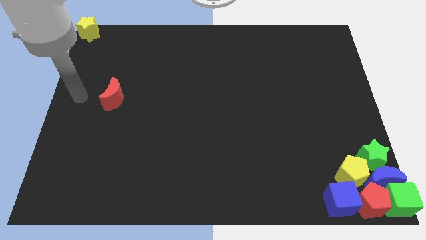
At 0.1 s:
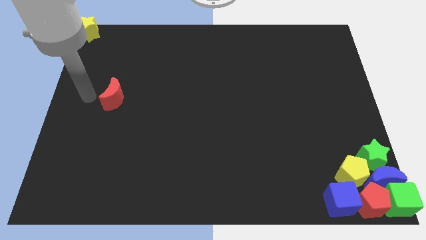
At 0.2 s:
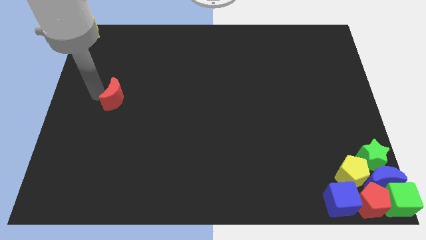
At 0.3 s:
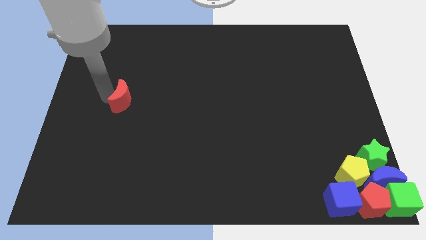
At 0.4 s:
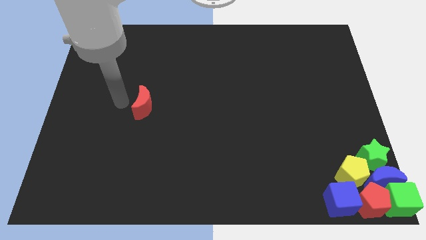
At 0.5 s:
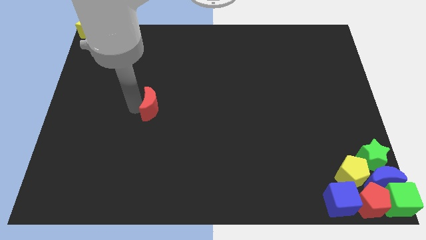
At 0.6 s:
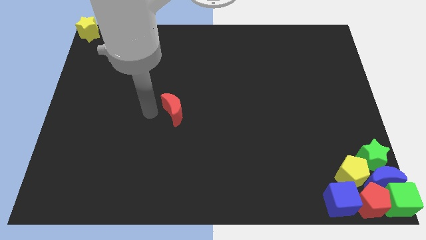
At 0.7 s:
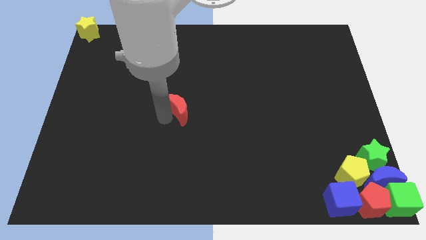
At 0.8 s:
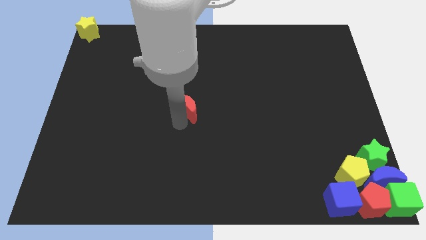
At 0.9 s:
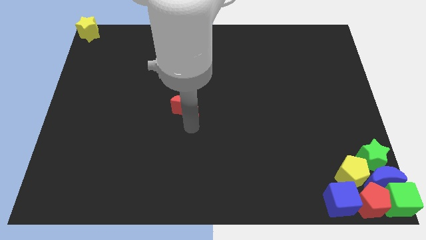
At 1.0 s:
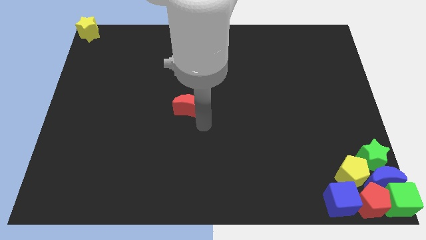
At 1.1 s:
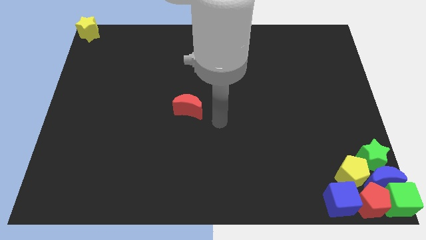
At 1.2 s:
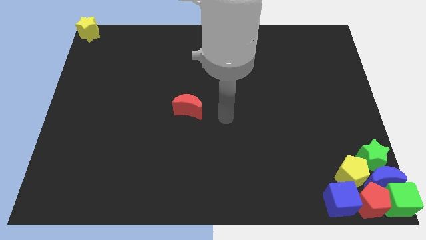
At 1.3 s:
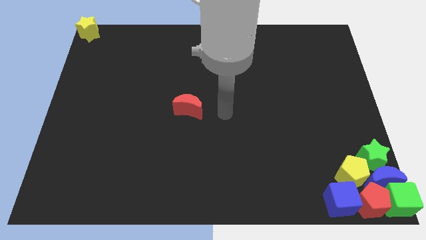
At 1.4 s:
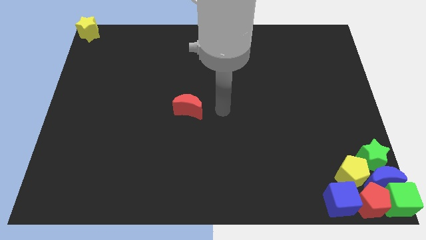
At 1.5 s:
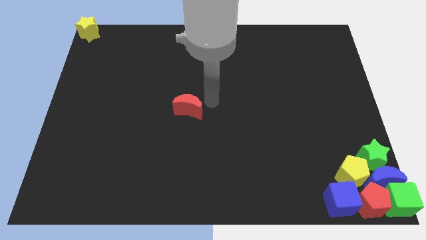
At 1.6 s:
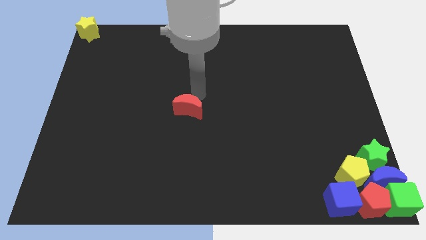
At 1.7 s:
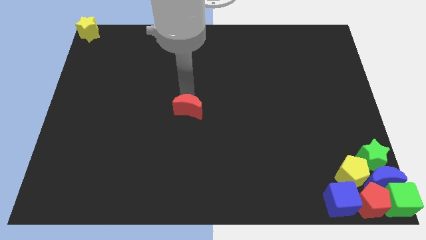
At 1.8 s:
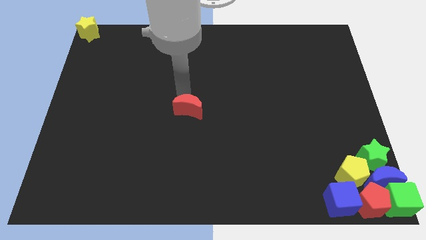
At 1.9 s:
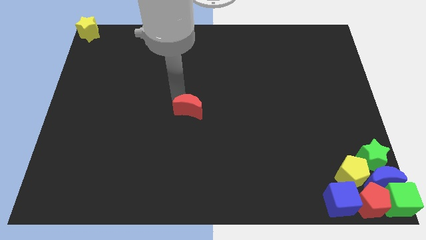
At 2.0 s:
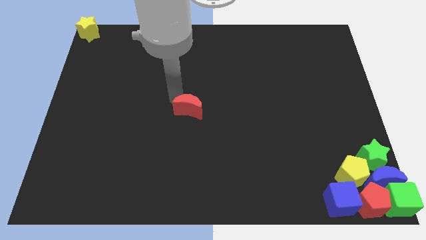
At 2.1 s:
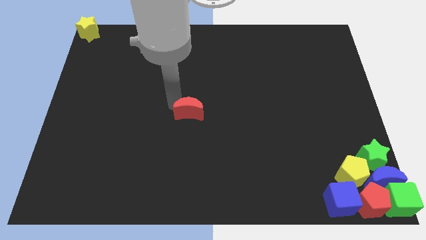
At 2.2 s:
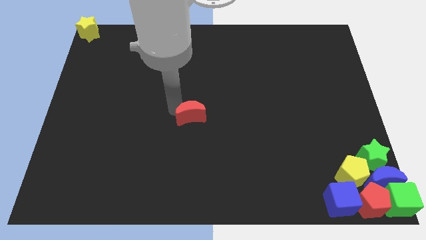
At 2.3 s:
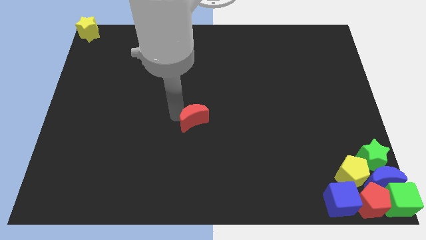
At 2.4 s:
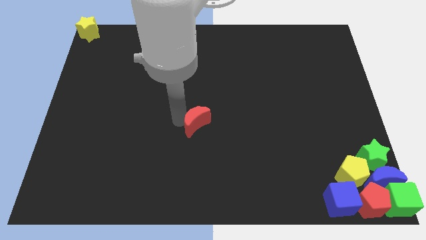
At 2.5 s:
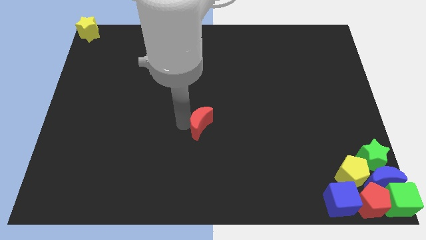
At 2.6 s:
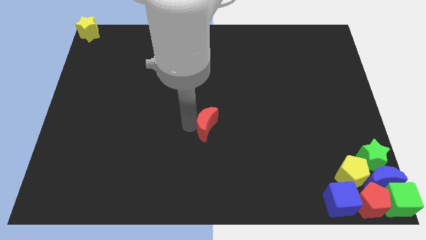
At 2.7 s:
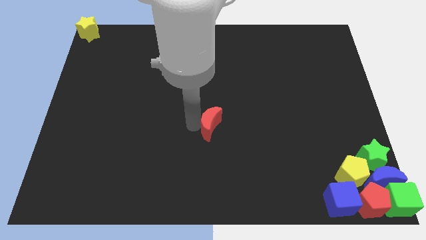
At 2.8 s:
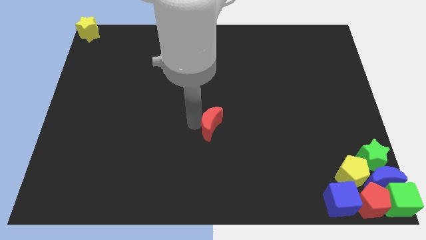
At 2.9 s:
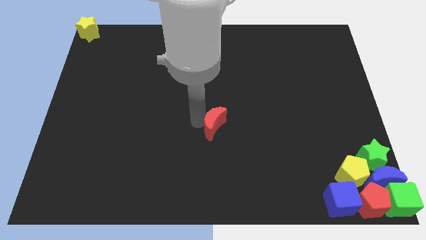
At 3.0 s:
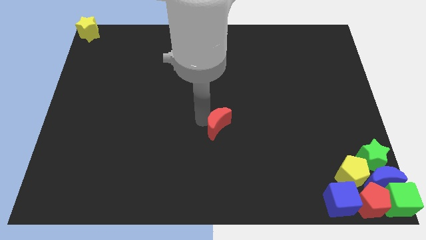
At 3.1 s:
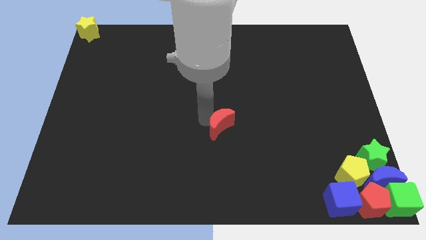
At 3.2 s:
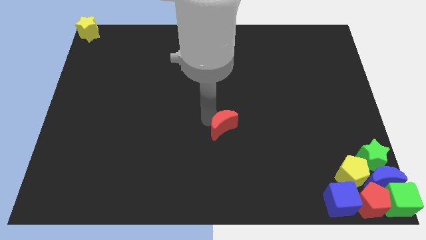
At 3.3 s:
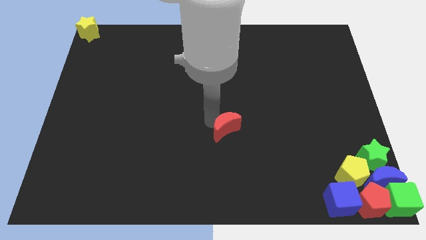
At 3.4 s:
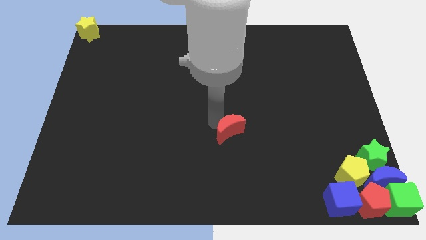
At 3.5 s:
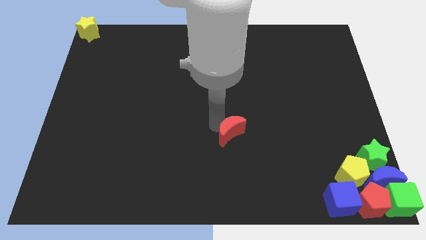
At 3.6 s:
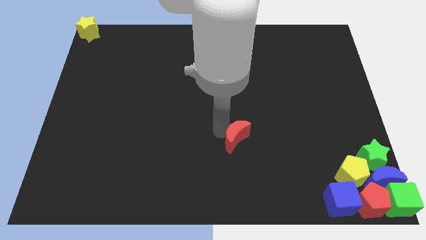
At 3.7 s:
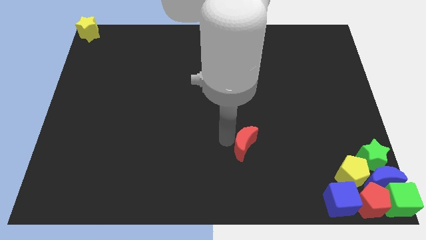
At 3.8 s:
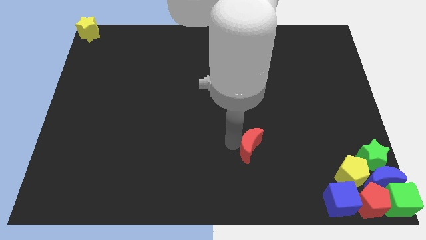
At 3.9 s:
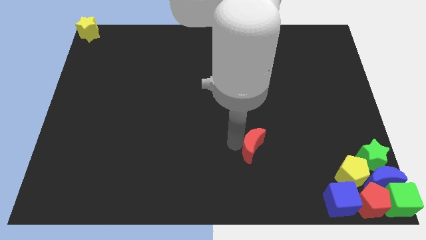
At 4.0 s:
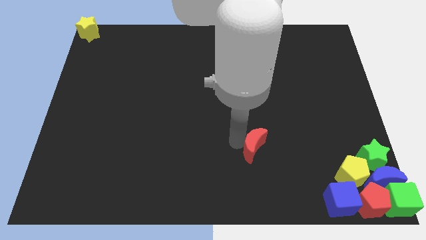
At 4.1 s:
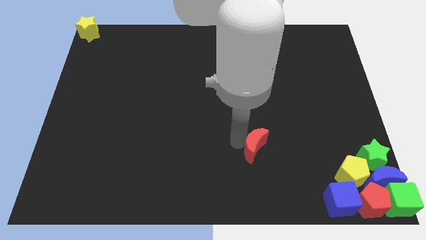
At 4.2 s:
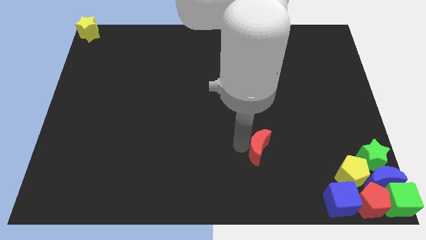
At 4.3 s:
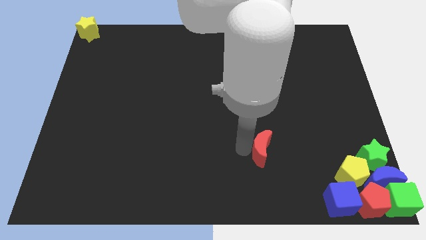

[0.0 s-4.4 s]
slide the red moon diagonally on the top left side of the blue cube

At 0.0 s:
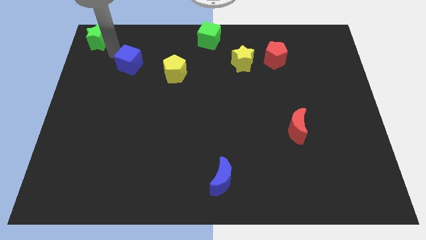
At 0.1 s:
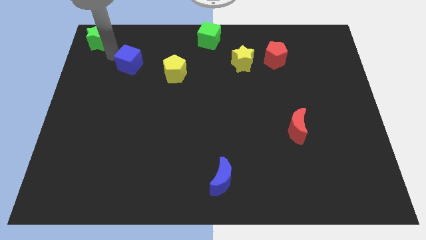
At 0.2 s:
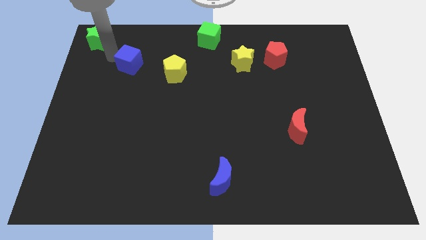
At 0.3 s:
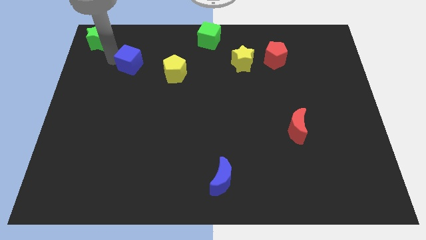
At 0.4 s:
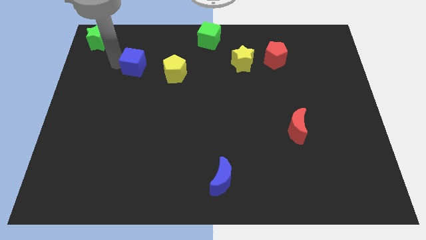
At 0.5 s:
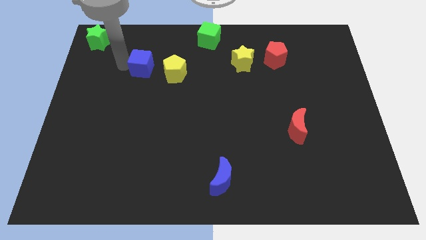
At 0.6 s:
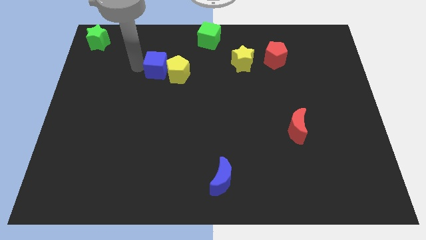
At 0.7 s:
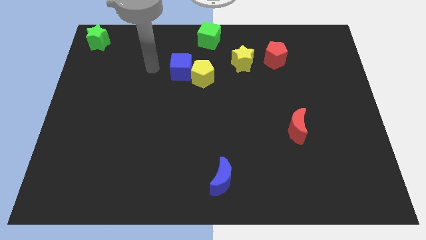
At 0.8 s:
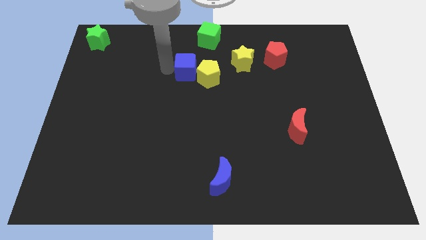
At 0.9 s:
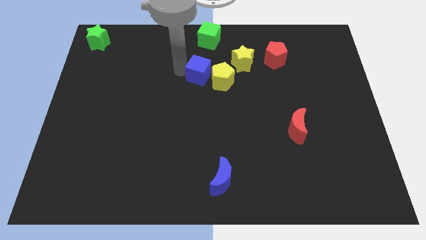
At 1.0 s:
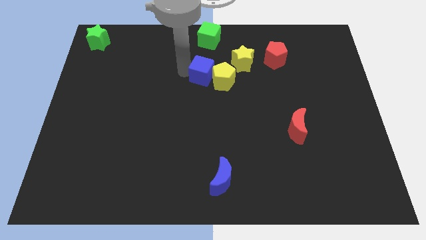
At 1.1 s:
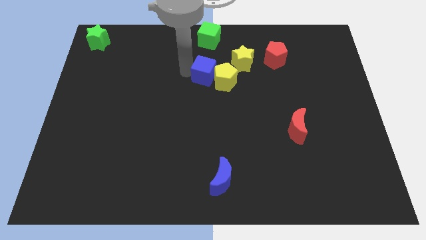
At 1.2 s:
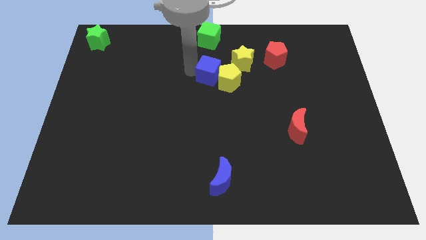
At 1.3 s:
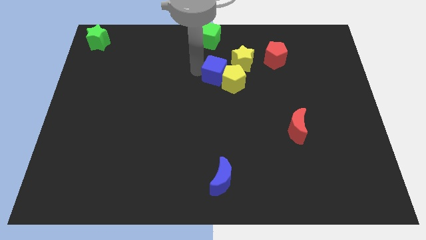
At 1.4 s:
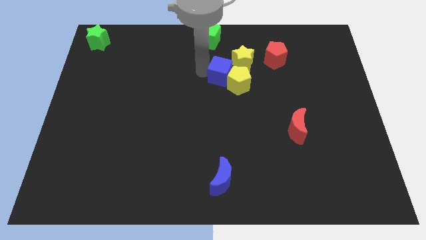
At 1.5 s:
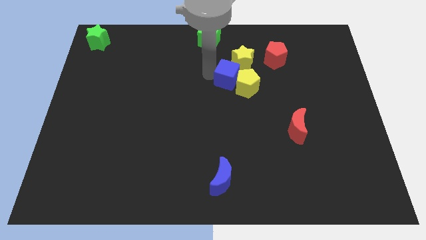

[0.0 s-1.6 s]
push the yellow pentagon to the bottom side of the yellow star with the blue cube

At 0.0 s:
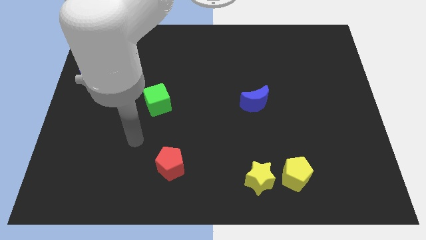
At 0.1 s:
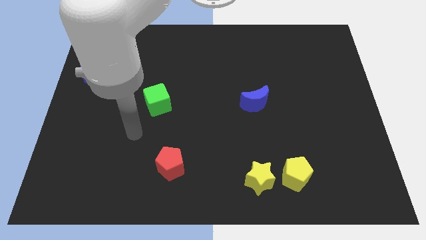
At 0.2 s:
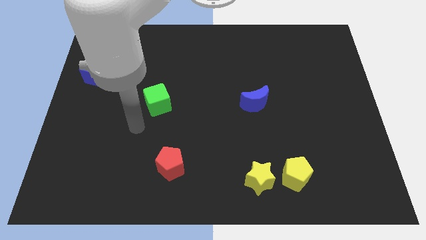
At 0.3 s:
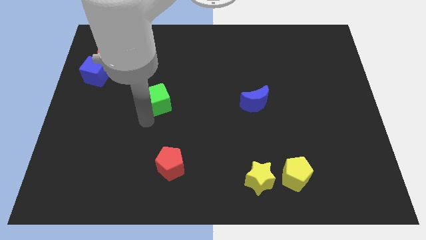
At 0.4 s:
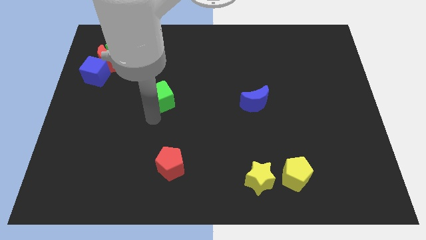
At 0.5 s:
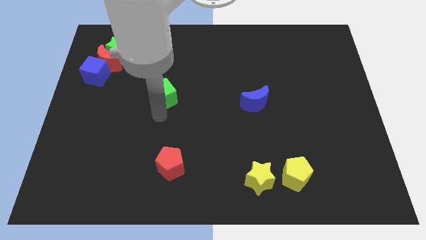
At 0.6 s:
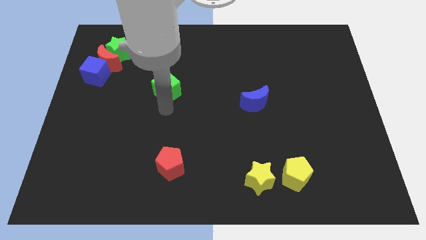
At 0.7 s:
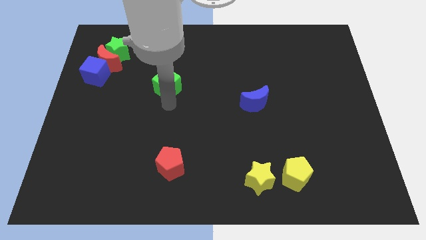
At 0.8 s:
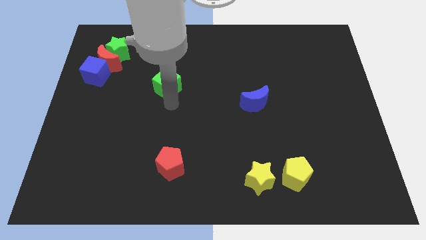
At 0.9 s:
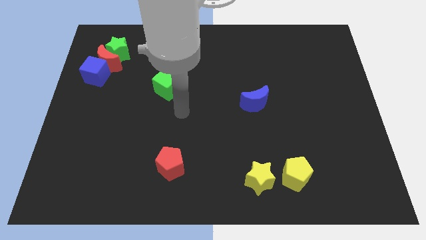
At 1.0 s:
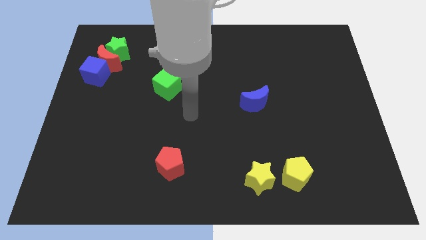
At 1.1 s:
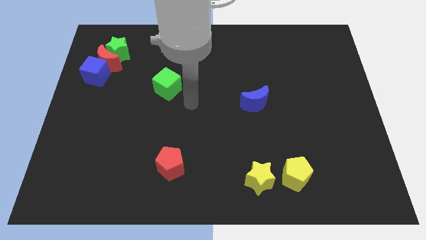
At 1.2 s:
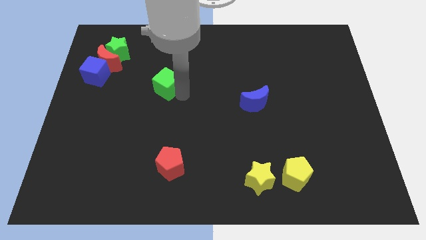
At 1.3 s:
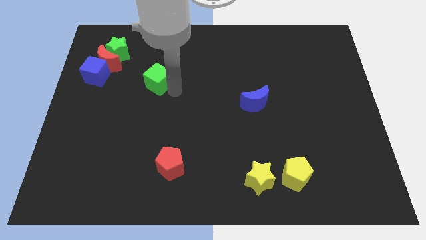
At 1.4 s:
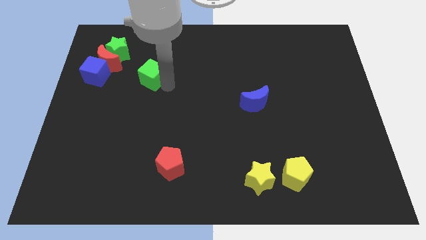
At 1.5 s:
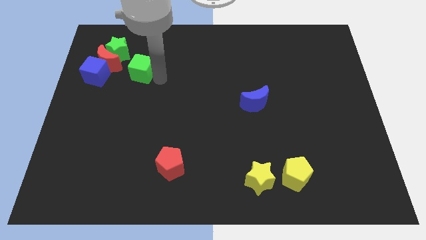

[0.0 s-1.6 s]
push the green cube close to the green star

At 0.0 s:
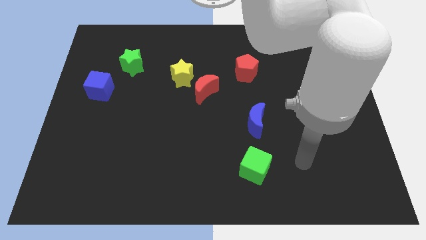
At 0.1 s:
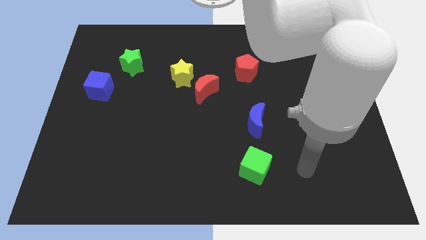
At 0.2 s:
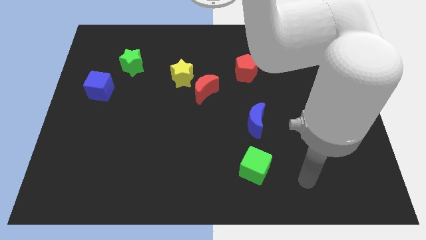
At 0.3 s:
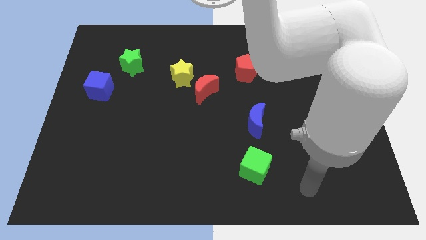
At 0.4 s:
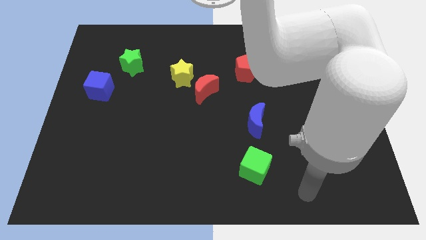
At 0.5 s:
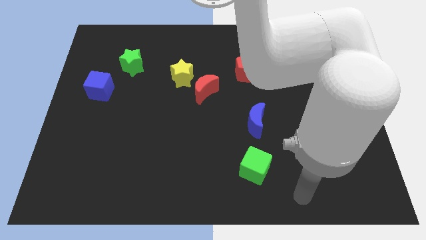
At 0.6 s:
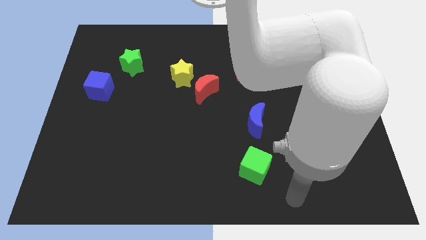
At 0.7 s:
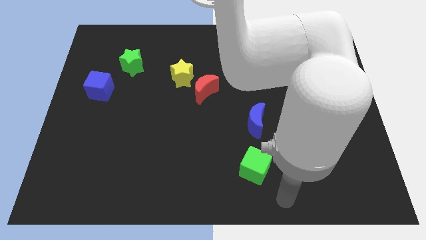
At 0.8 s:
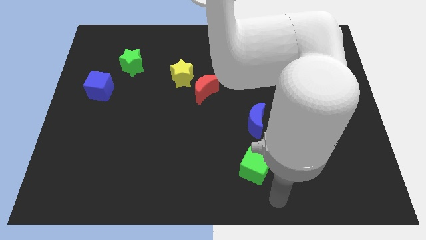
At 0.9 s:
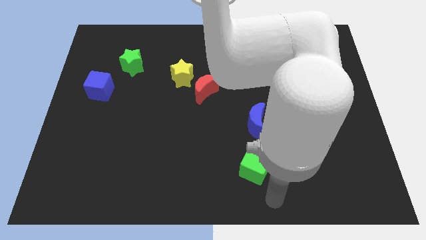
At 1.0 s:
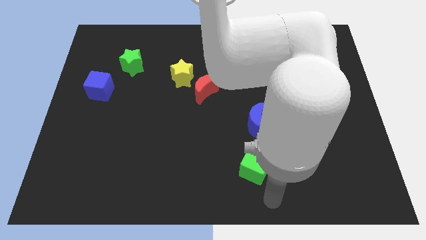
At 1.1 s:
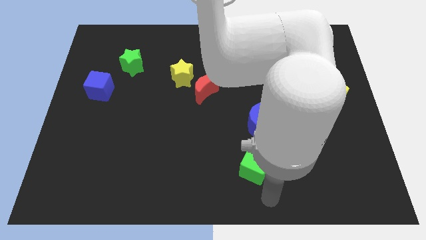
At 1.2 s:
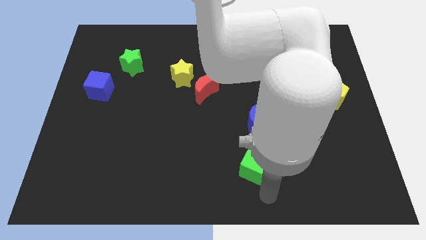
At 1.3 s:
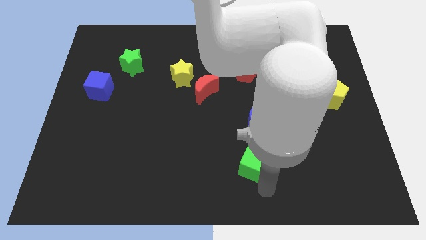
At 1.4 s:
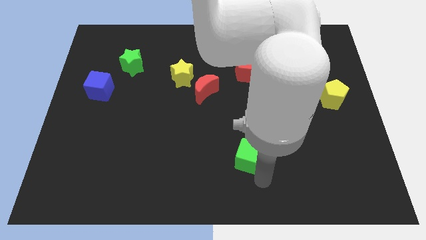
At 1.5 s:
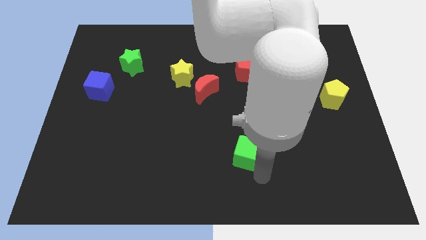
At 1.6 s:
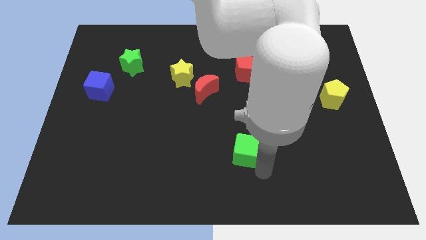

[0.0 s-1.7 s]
move green cube close to blue moon
